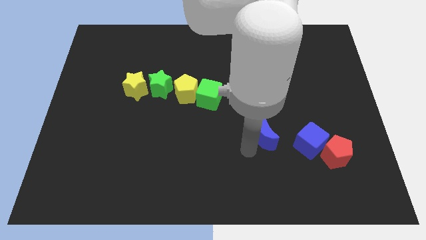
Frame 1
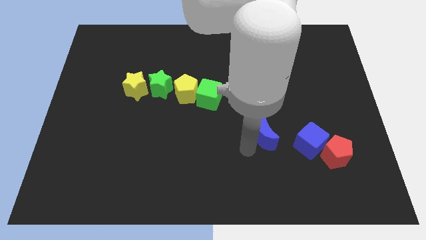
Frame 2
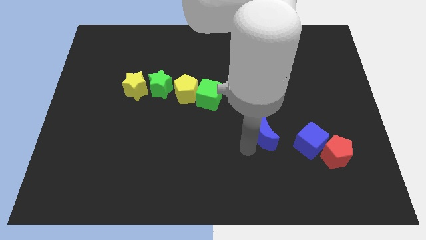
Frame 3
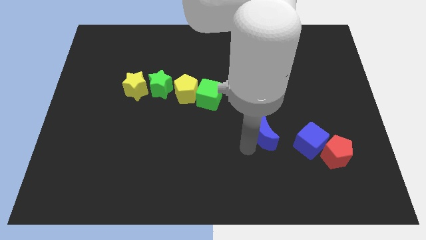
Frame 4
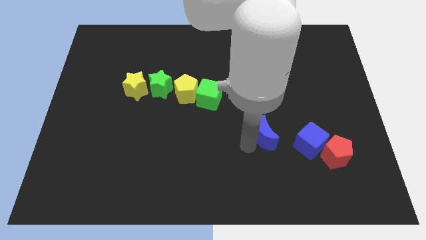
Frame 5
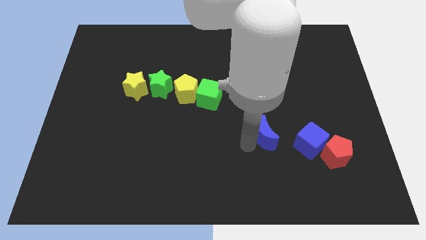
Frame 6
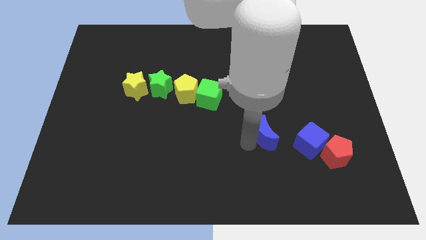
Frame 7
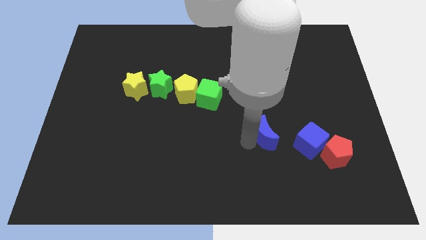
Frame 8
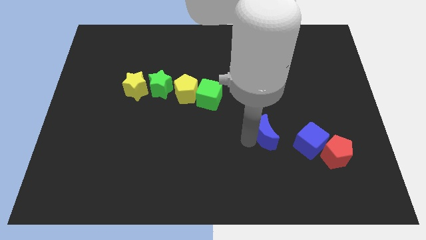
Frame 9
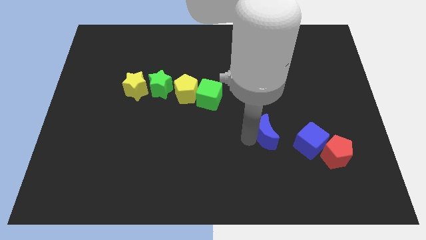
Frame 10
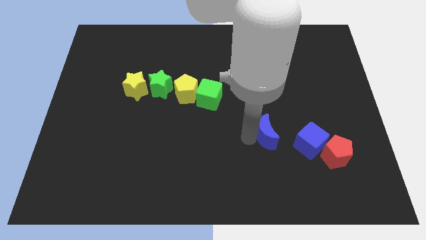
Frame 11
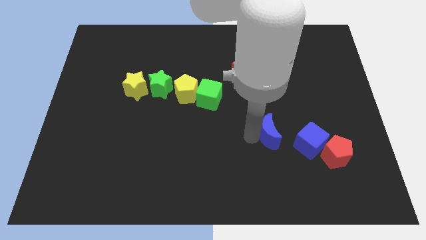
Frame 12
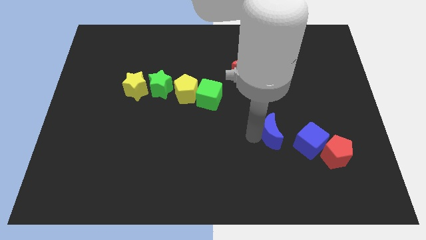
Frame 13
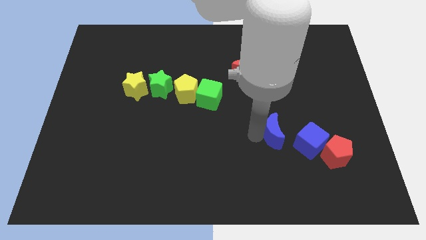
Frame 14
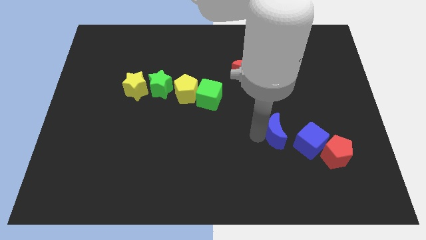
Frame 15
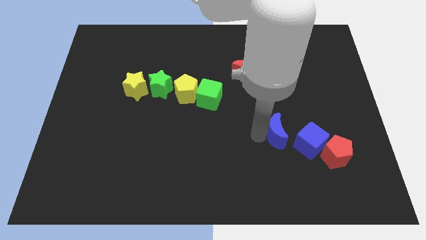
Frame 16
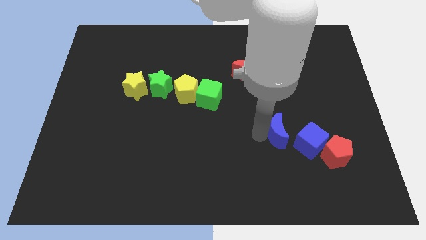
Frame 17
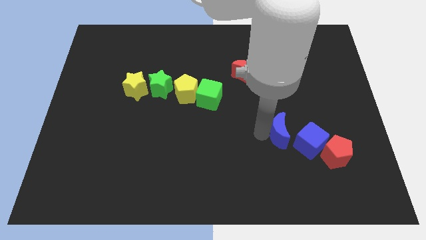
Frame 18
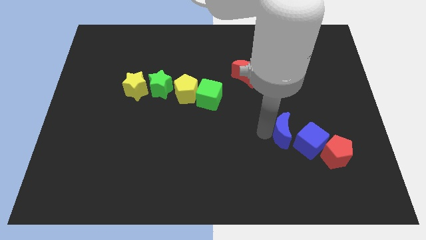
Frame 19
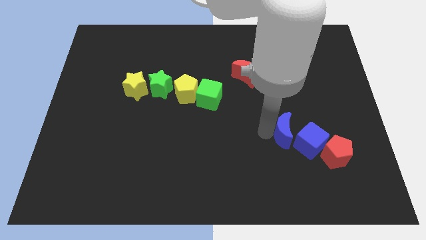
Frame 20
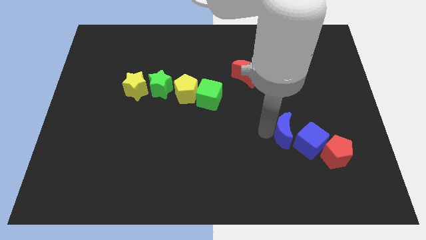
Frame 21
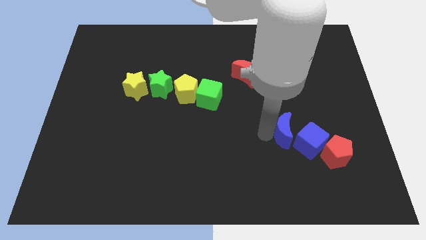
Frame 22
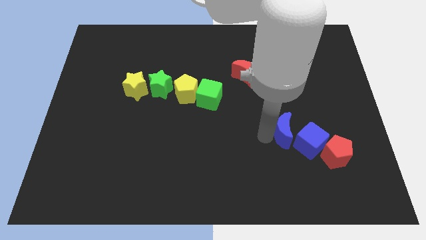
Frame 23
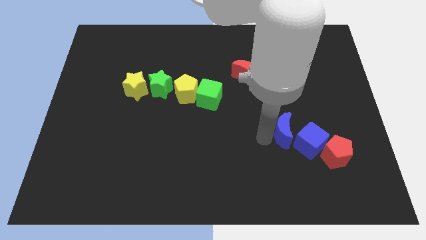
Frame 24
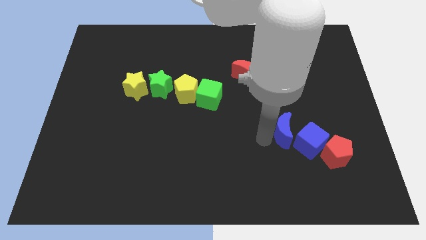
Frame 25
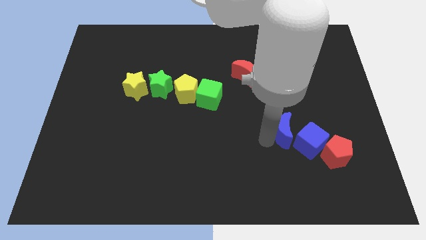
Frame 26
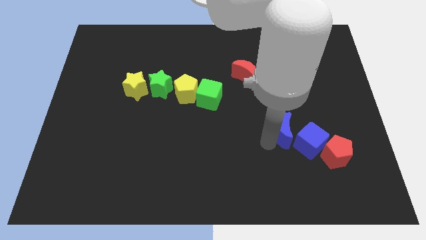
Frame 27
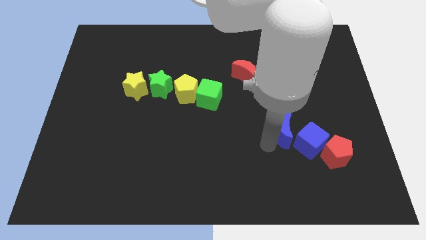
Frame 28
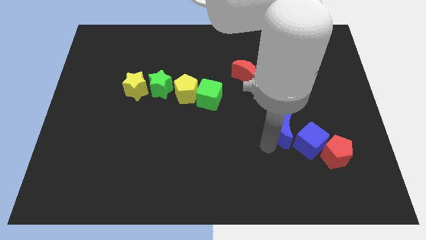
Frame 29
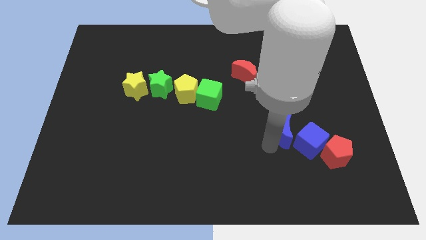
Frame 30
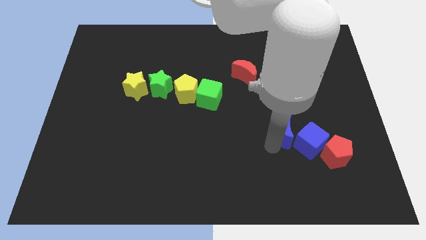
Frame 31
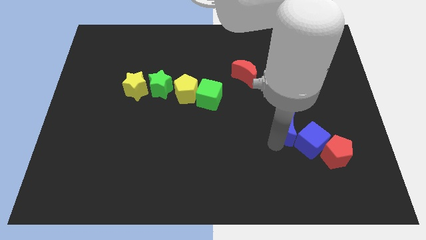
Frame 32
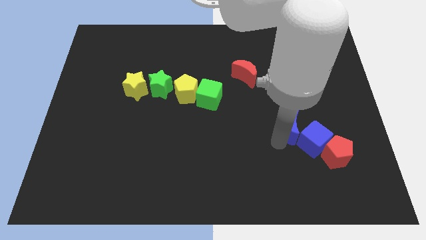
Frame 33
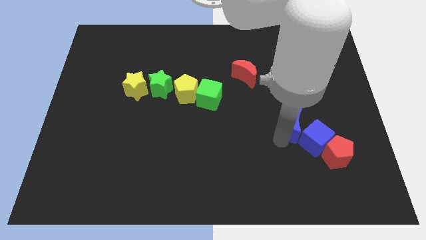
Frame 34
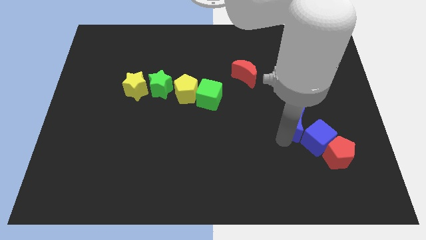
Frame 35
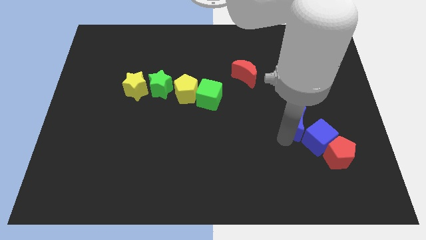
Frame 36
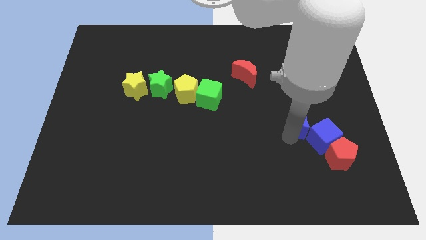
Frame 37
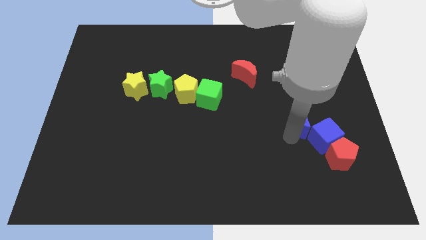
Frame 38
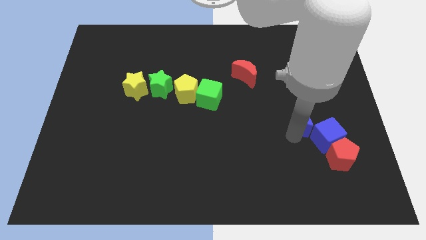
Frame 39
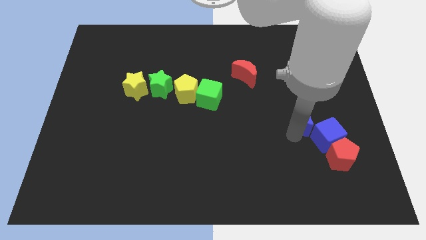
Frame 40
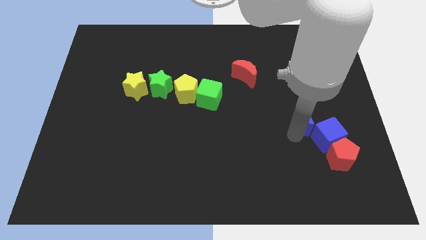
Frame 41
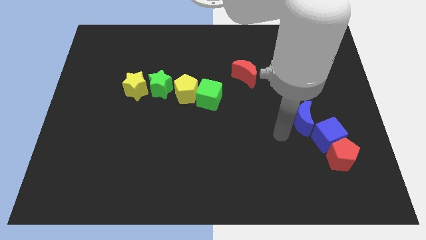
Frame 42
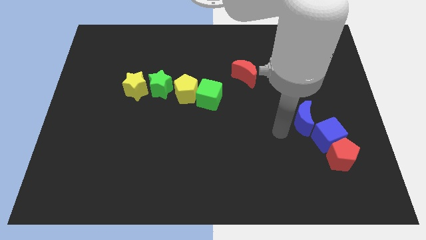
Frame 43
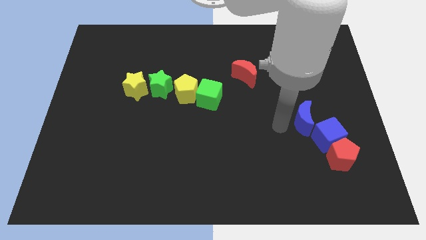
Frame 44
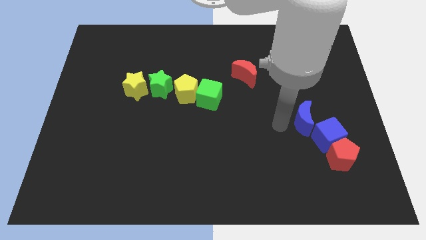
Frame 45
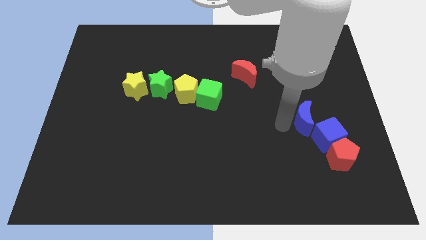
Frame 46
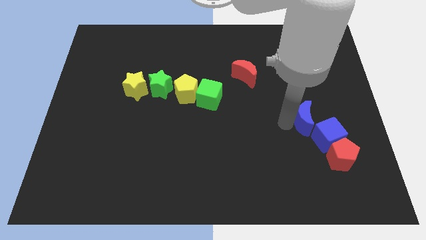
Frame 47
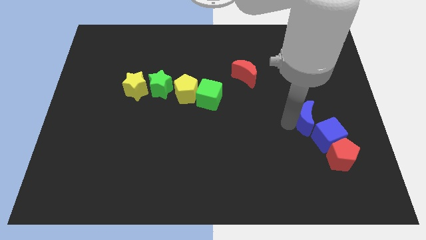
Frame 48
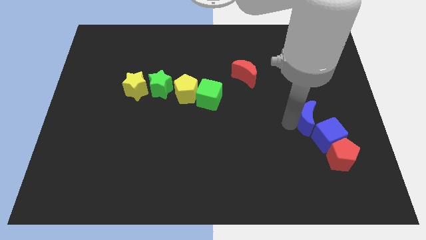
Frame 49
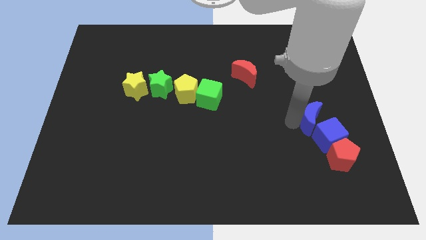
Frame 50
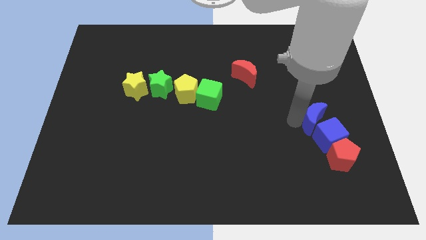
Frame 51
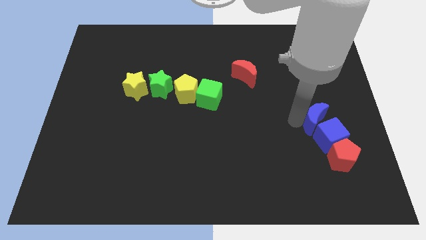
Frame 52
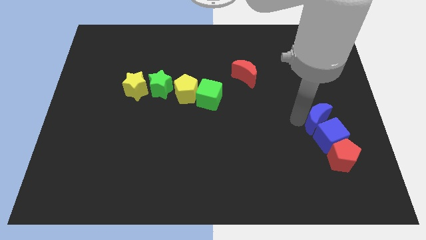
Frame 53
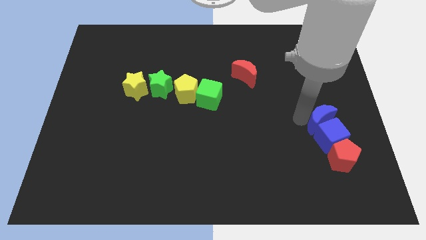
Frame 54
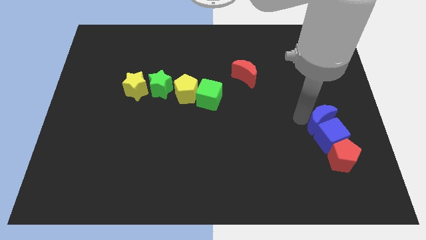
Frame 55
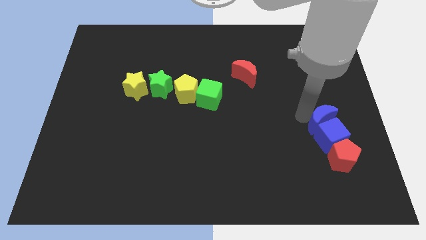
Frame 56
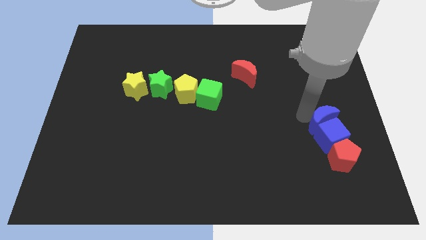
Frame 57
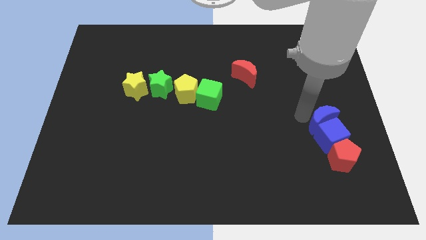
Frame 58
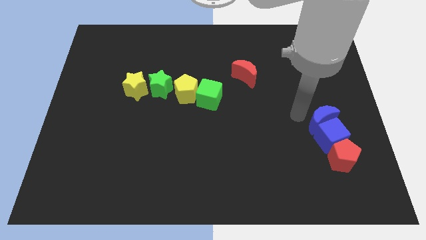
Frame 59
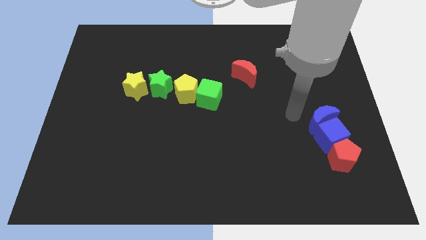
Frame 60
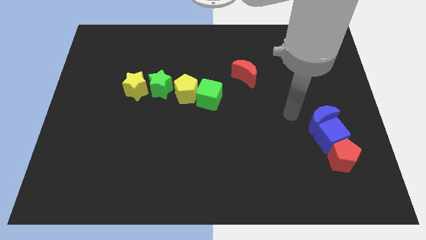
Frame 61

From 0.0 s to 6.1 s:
place the blue crescent above the blue cube

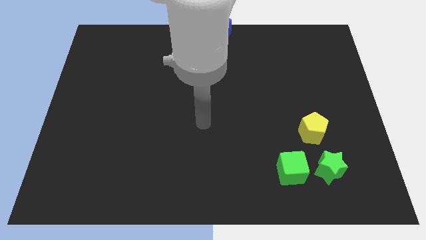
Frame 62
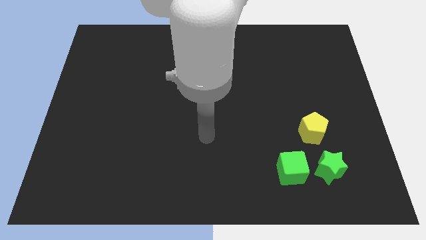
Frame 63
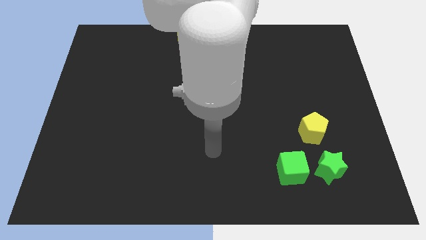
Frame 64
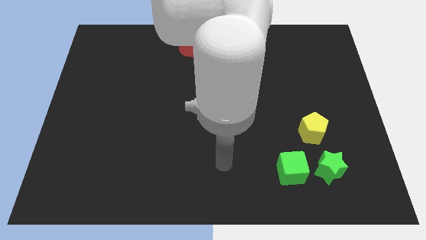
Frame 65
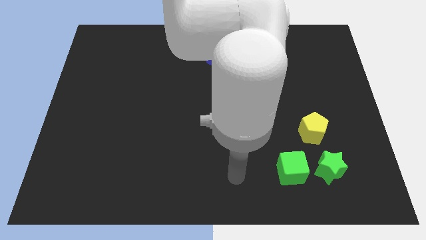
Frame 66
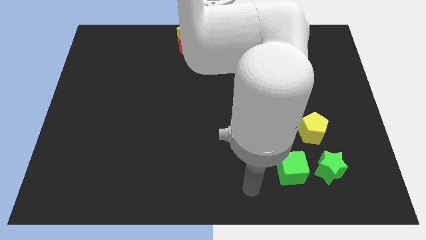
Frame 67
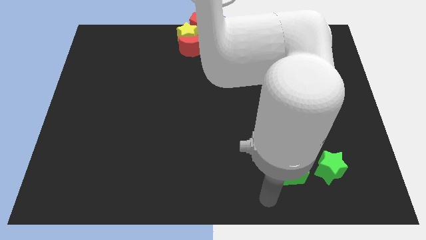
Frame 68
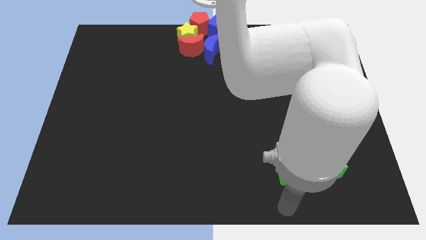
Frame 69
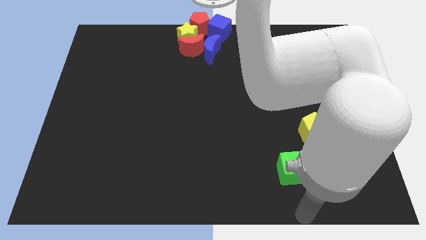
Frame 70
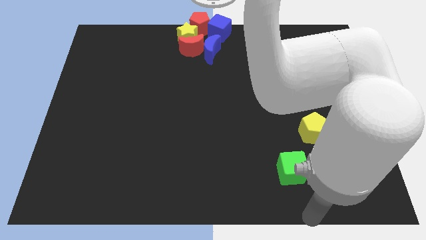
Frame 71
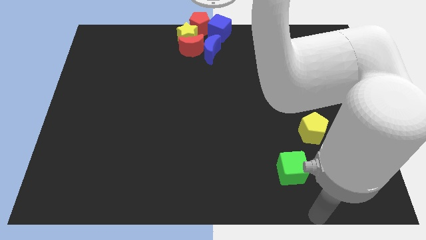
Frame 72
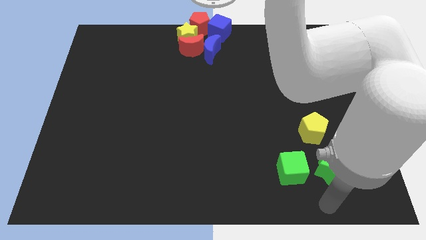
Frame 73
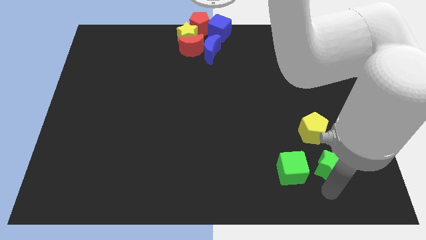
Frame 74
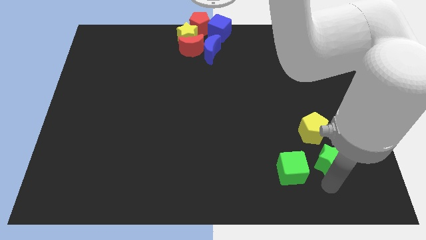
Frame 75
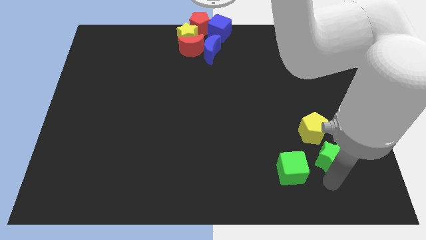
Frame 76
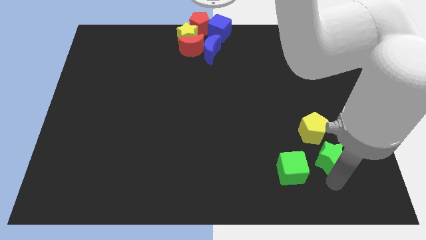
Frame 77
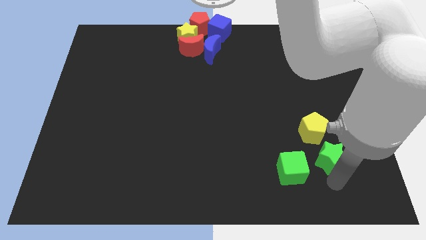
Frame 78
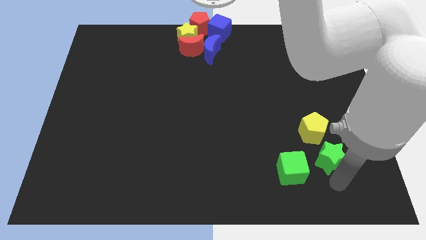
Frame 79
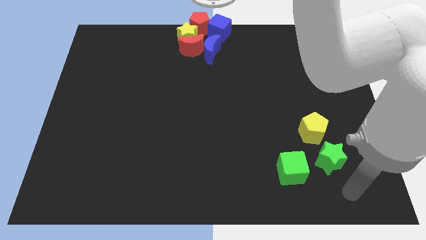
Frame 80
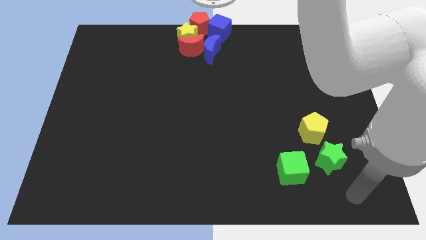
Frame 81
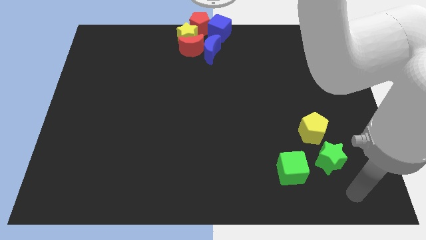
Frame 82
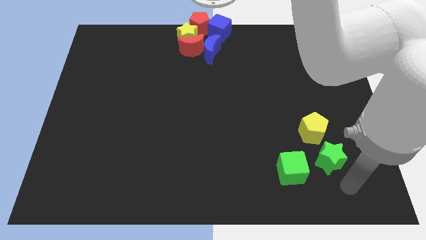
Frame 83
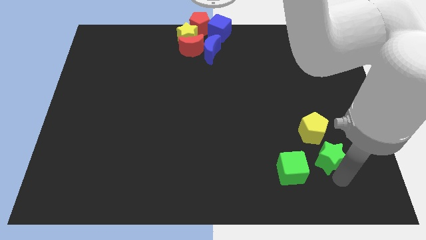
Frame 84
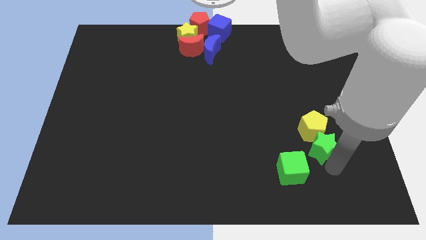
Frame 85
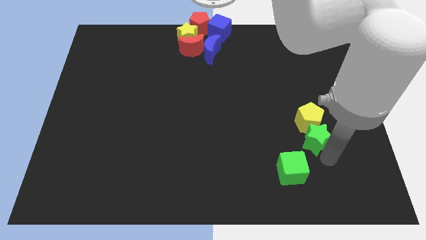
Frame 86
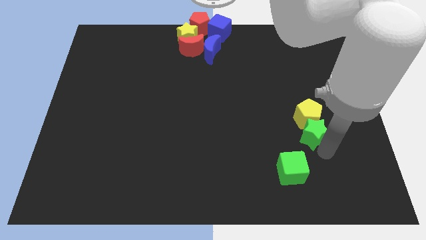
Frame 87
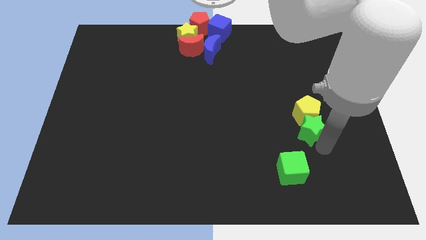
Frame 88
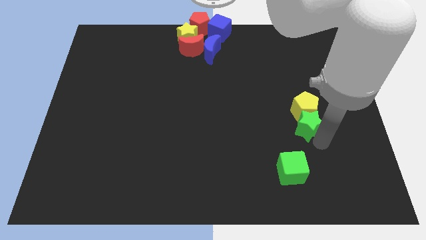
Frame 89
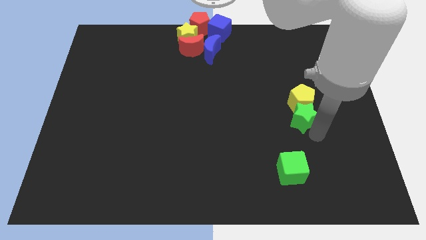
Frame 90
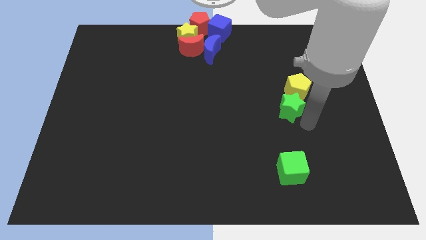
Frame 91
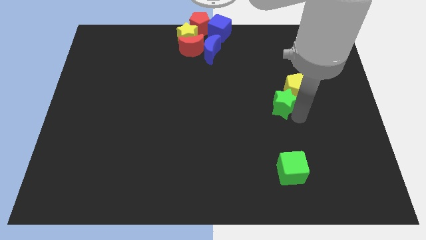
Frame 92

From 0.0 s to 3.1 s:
push green star in to yellow pentagon
